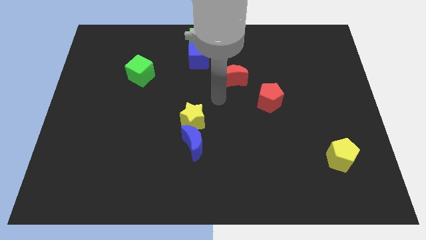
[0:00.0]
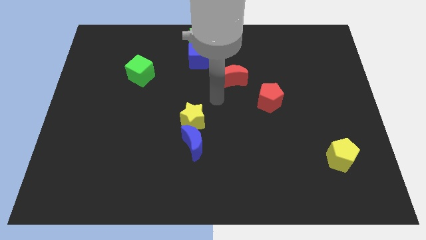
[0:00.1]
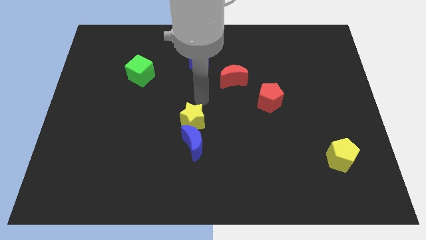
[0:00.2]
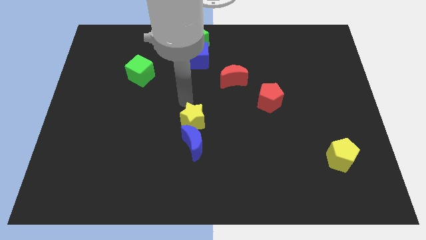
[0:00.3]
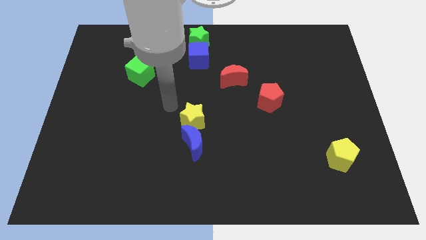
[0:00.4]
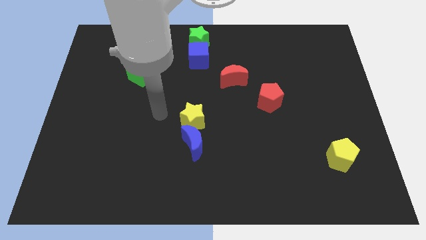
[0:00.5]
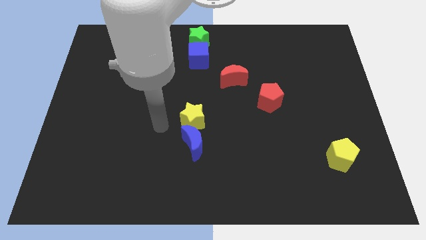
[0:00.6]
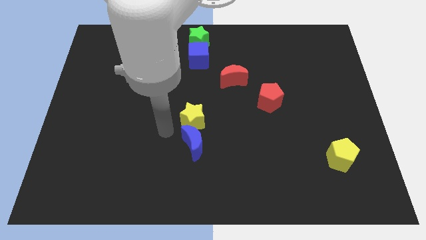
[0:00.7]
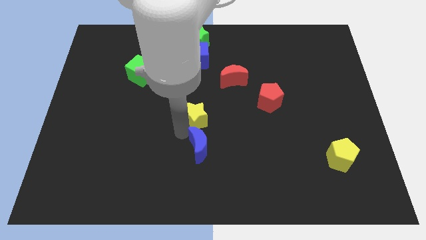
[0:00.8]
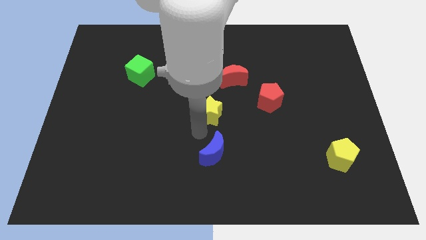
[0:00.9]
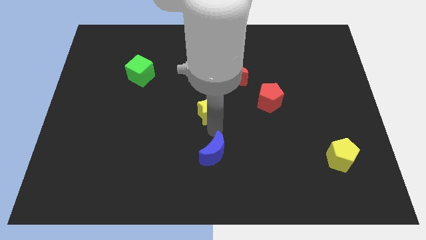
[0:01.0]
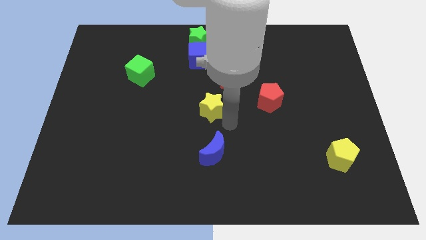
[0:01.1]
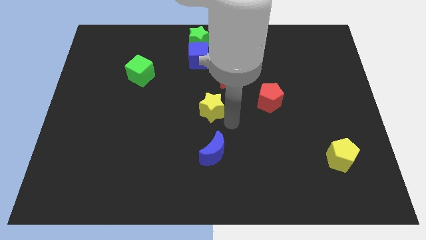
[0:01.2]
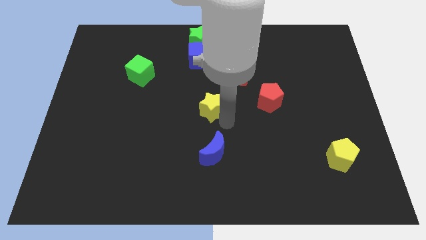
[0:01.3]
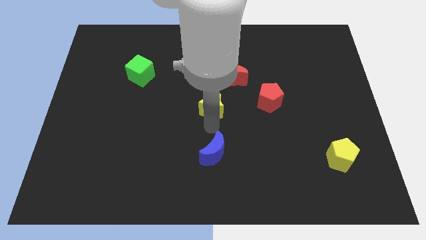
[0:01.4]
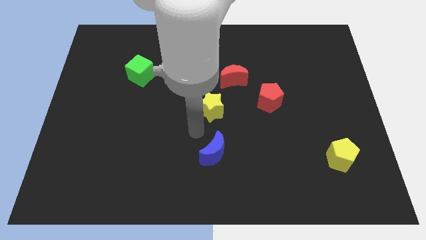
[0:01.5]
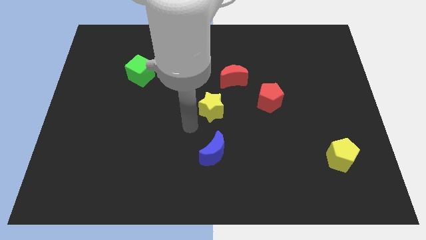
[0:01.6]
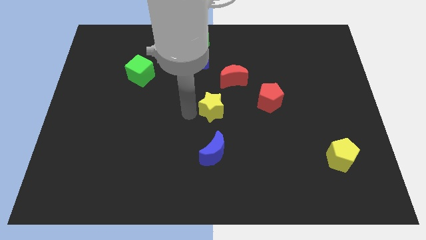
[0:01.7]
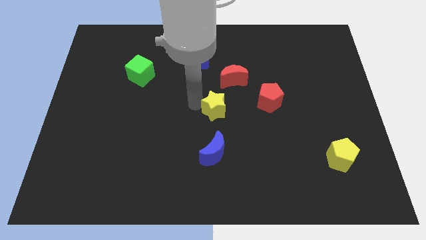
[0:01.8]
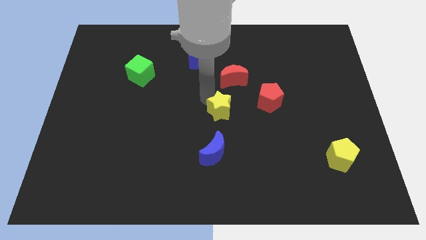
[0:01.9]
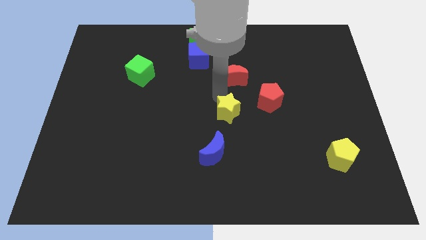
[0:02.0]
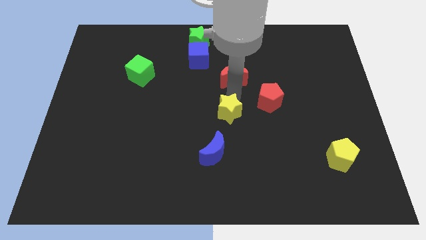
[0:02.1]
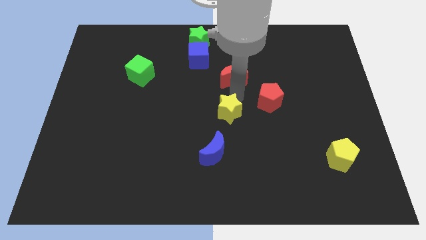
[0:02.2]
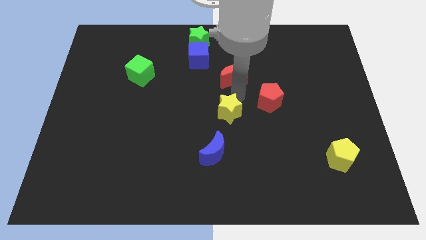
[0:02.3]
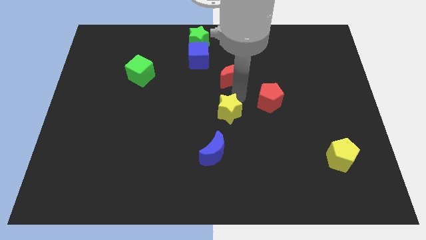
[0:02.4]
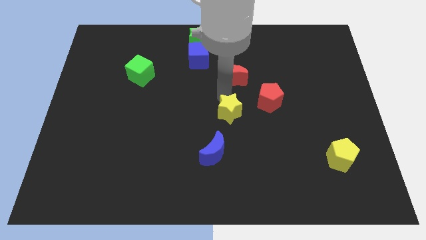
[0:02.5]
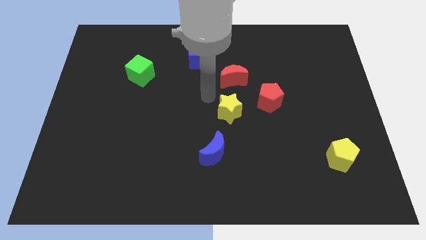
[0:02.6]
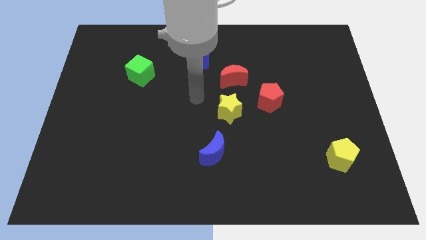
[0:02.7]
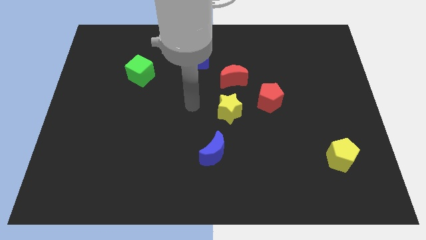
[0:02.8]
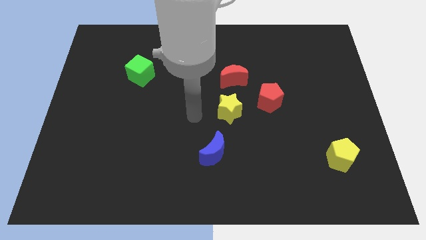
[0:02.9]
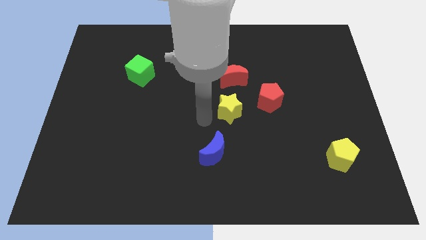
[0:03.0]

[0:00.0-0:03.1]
separate yellow star from blue crescent

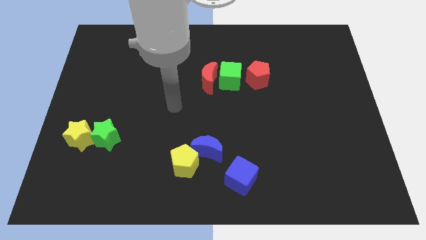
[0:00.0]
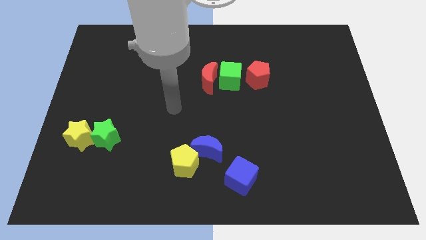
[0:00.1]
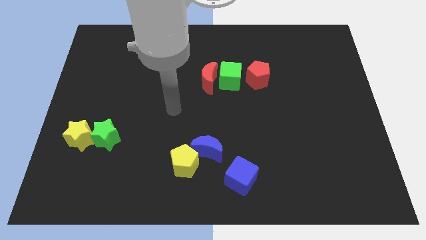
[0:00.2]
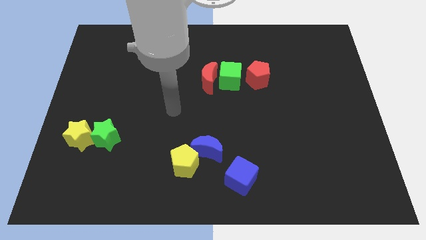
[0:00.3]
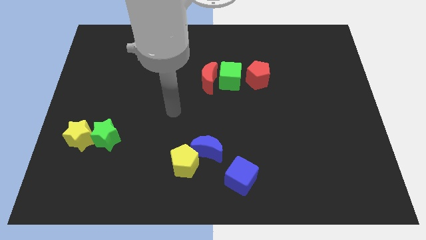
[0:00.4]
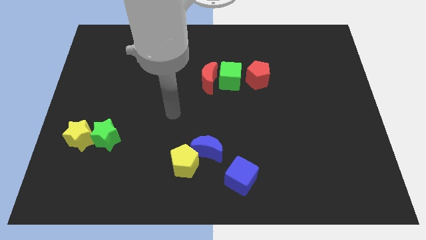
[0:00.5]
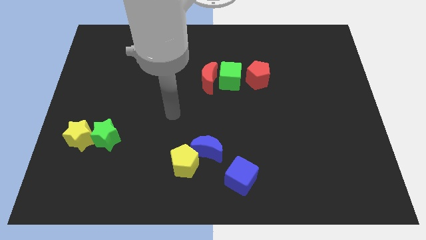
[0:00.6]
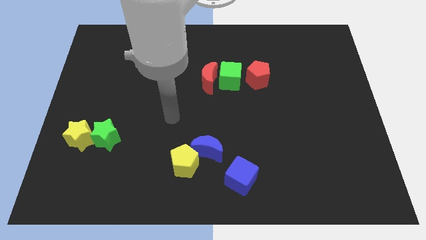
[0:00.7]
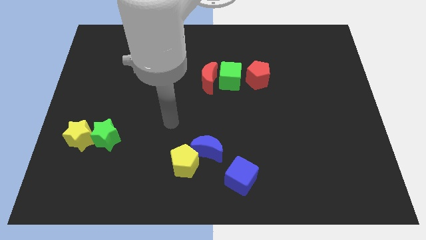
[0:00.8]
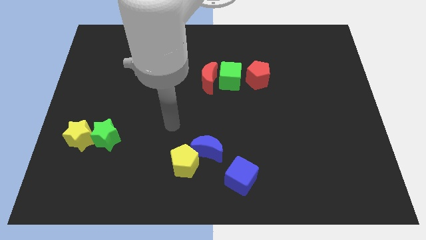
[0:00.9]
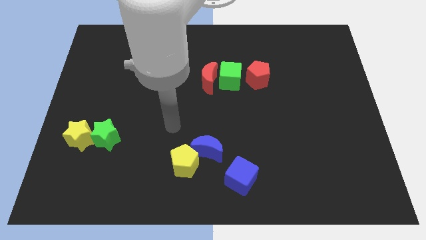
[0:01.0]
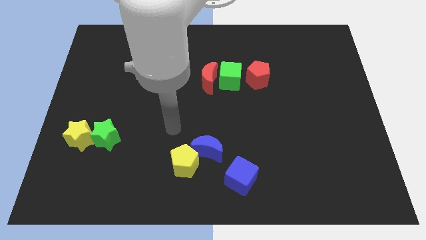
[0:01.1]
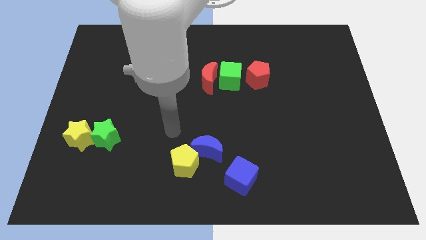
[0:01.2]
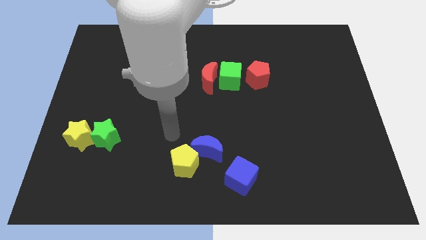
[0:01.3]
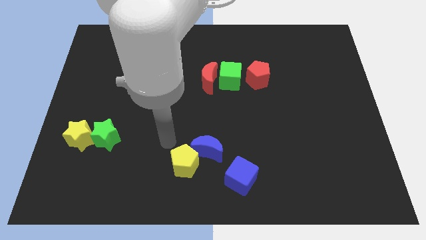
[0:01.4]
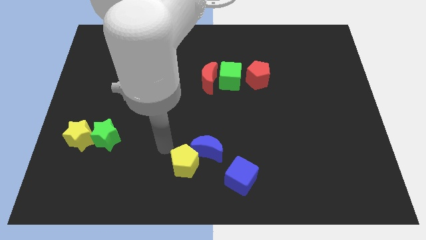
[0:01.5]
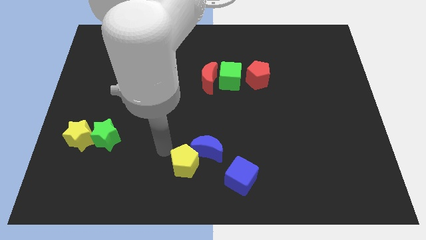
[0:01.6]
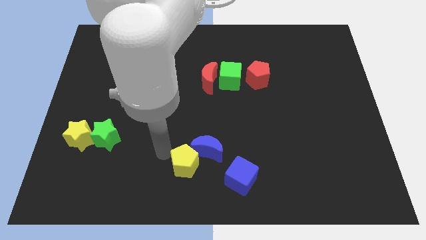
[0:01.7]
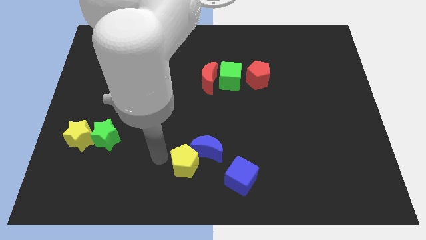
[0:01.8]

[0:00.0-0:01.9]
point your arm to the left side of the yellow pentagon

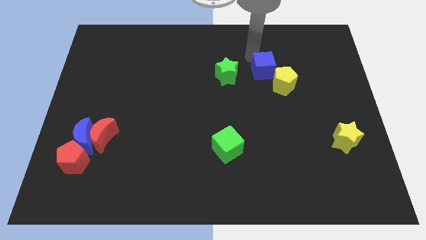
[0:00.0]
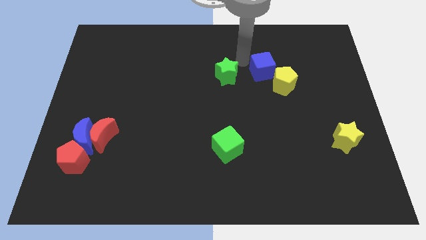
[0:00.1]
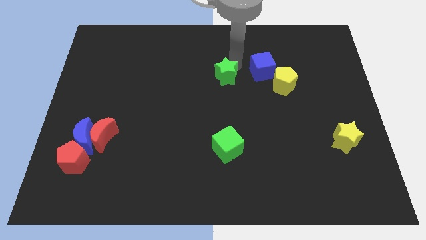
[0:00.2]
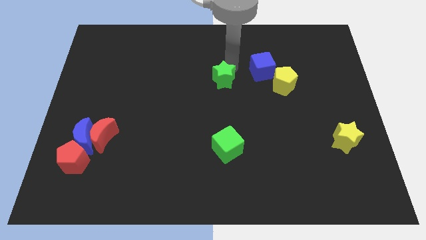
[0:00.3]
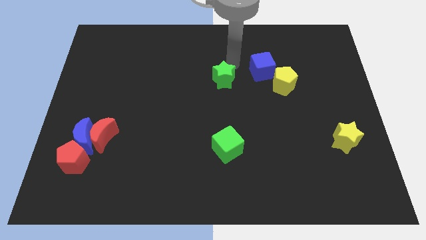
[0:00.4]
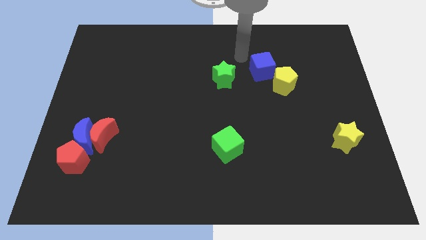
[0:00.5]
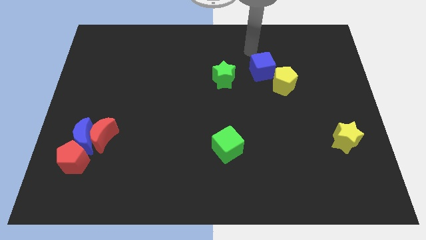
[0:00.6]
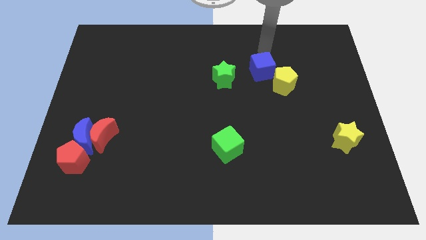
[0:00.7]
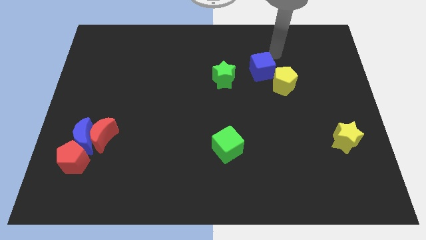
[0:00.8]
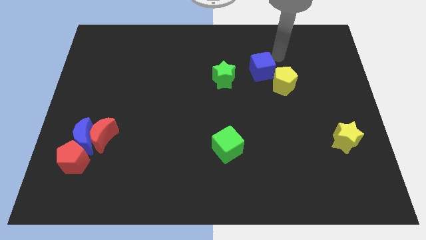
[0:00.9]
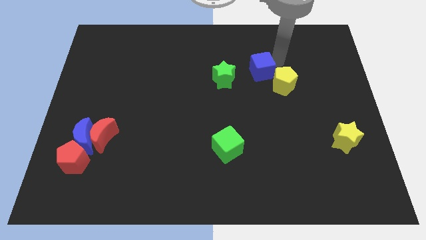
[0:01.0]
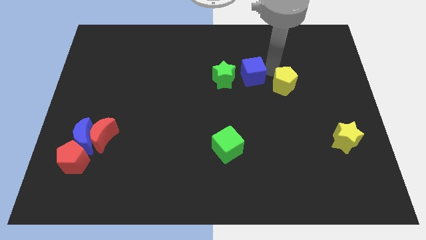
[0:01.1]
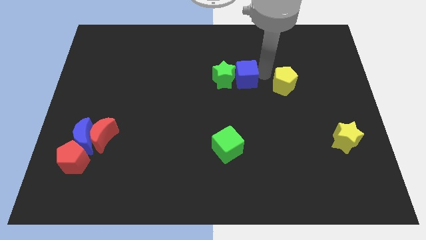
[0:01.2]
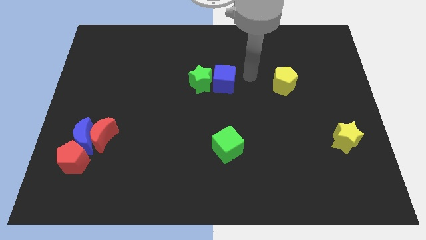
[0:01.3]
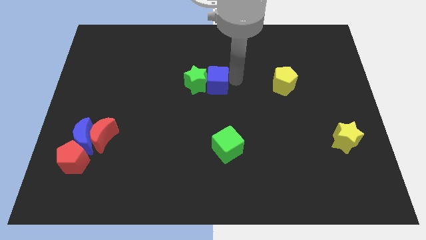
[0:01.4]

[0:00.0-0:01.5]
slide the green star and blue cube diagonally on the top left side of the green cube

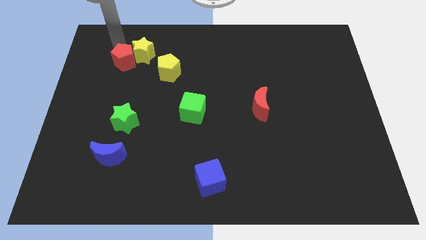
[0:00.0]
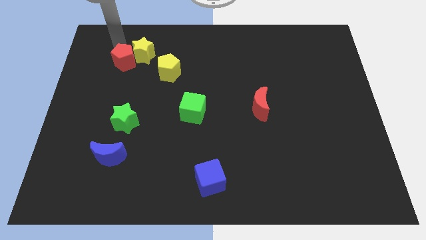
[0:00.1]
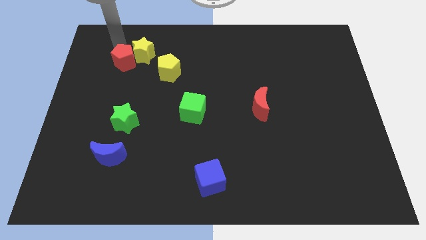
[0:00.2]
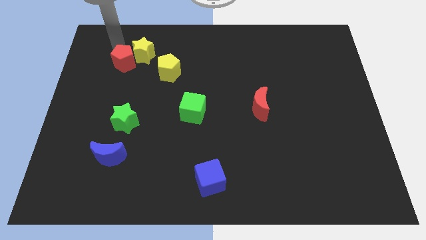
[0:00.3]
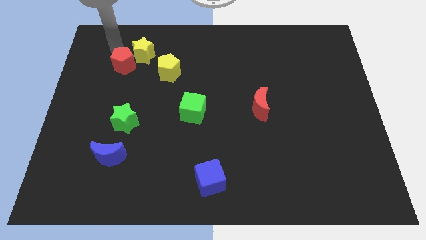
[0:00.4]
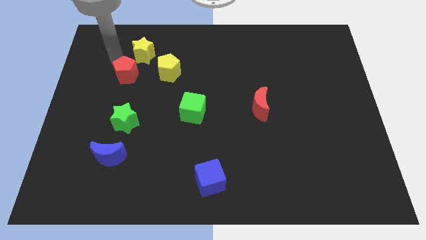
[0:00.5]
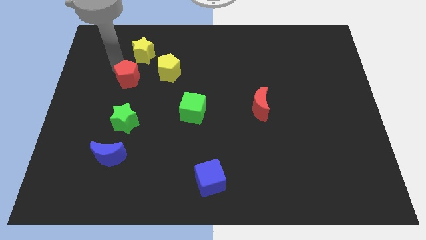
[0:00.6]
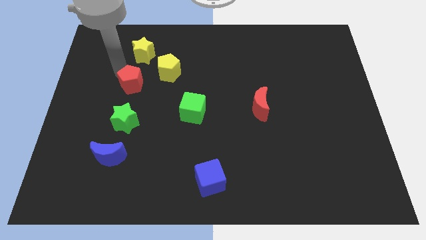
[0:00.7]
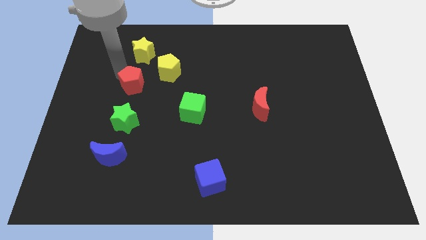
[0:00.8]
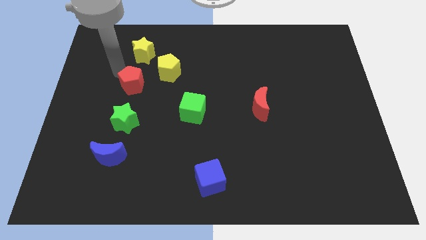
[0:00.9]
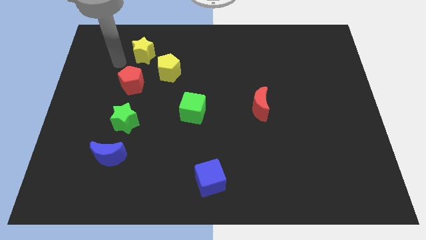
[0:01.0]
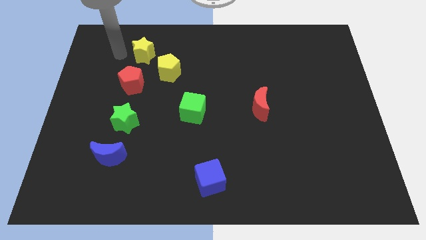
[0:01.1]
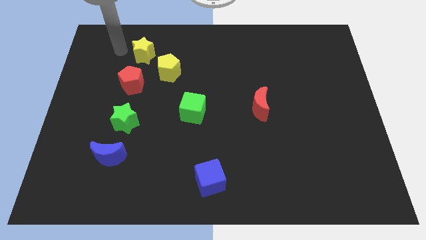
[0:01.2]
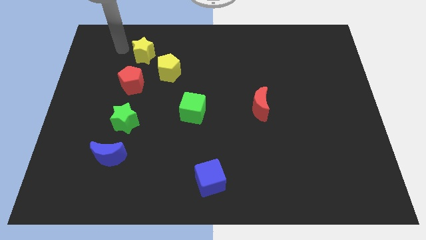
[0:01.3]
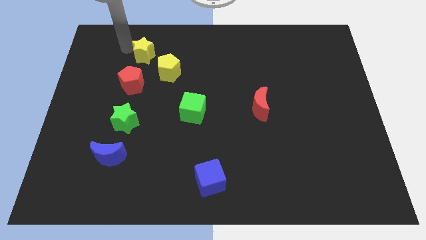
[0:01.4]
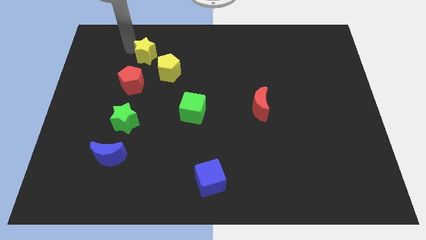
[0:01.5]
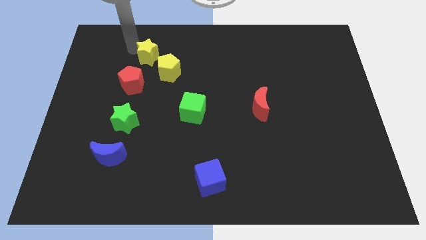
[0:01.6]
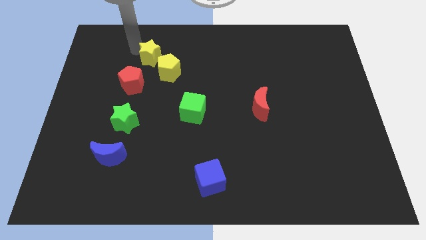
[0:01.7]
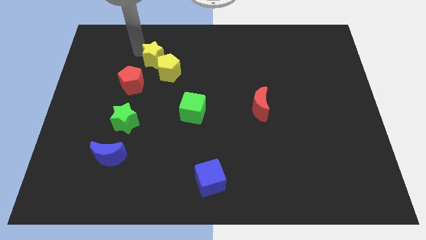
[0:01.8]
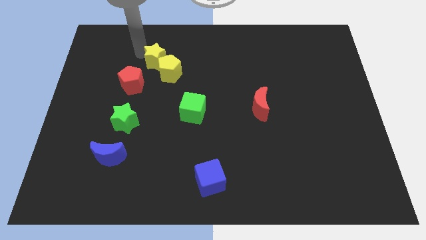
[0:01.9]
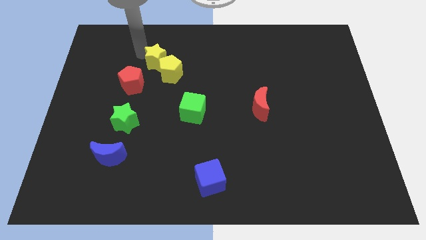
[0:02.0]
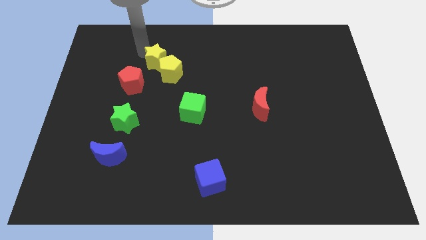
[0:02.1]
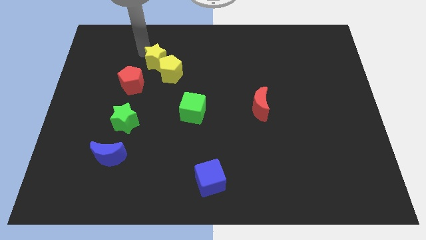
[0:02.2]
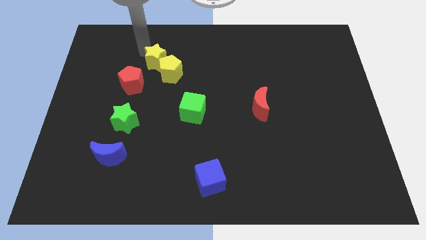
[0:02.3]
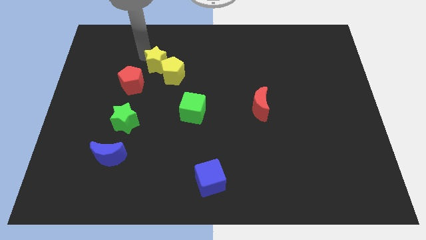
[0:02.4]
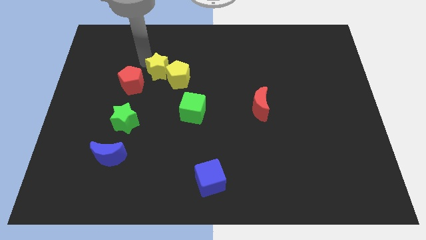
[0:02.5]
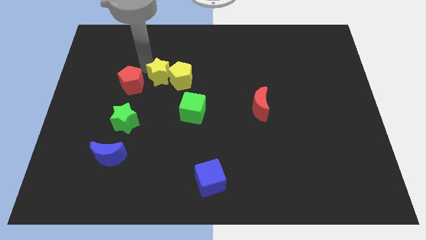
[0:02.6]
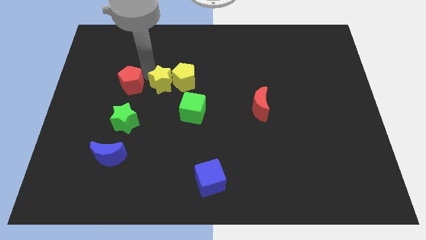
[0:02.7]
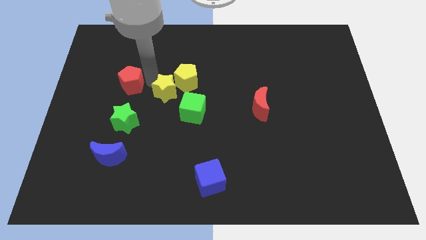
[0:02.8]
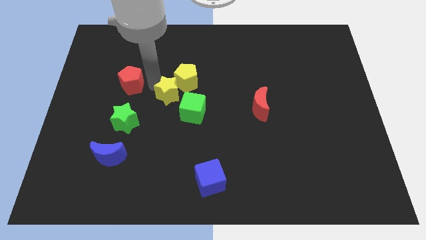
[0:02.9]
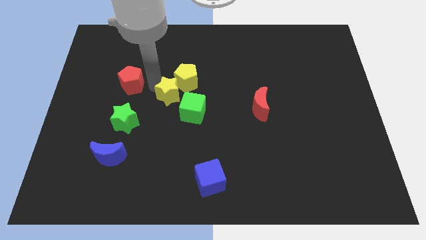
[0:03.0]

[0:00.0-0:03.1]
push the yellow star into the yellow pentagon
